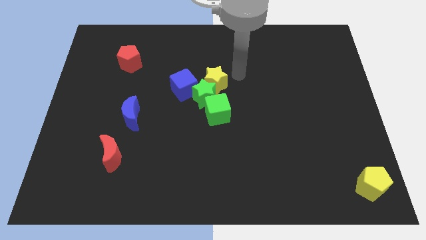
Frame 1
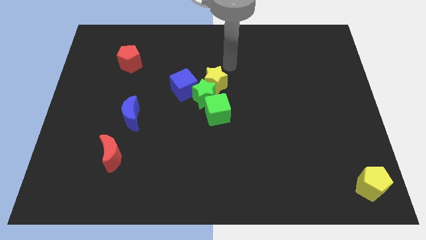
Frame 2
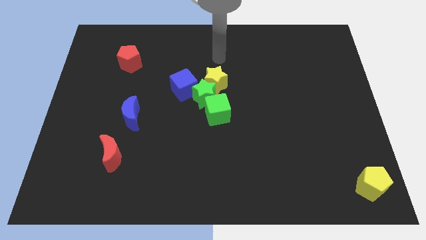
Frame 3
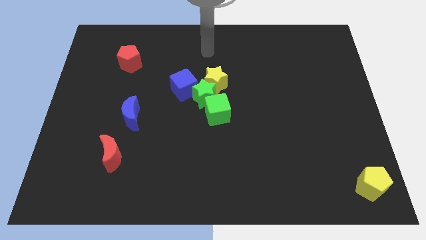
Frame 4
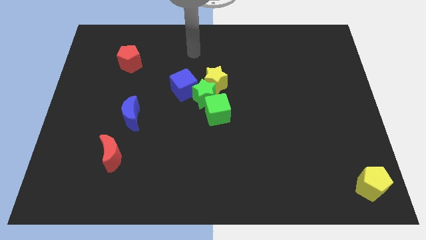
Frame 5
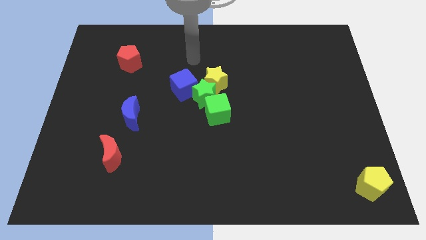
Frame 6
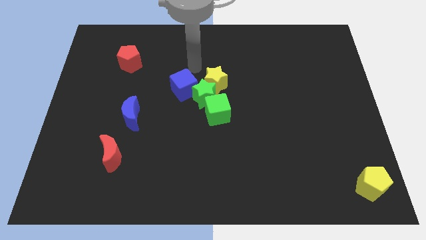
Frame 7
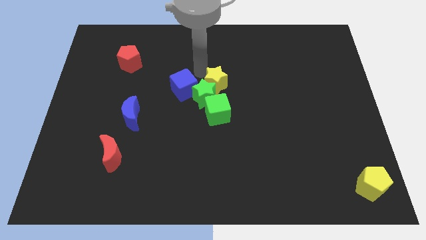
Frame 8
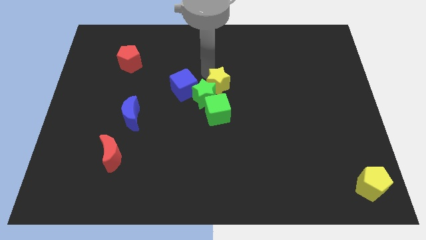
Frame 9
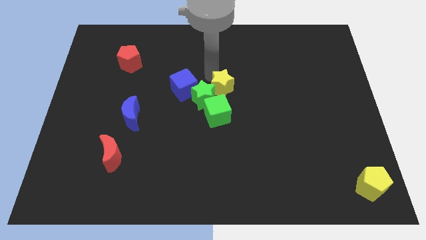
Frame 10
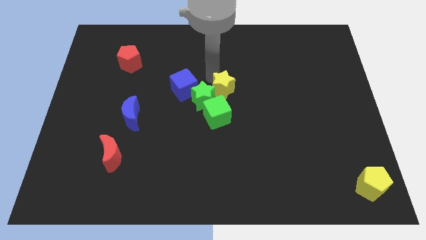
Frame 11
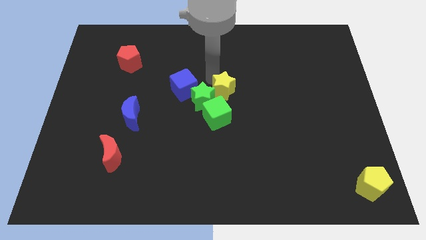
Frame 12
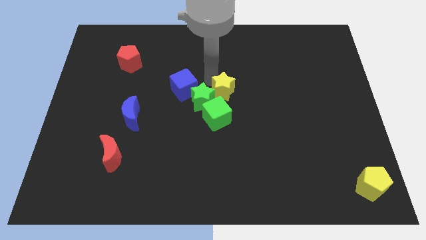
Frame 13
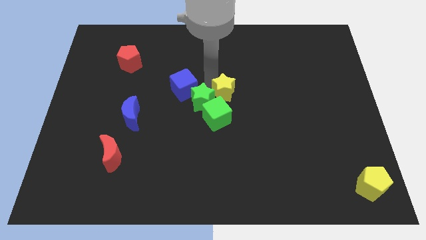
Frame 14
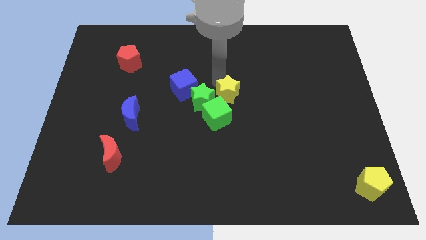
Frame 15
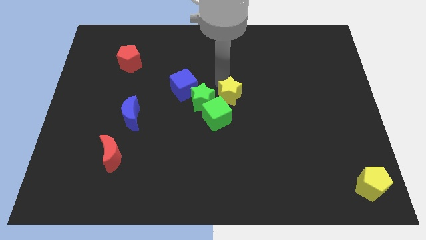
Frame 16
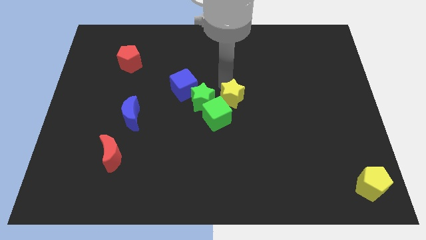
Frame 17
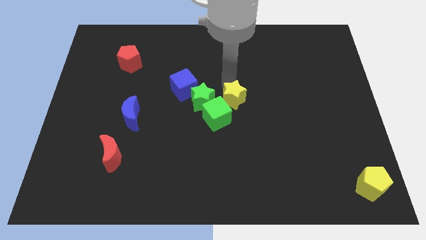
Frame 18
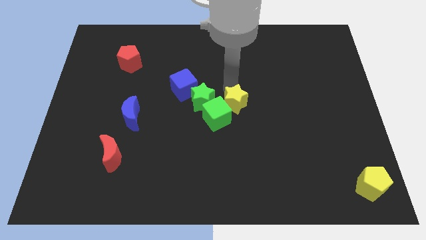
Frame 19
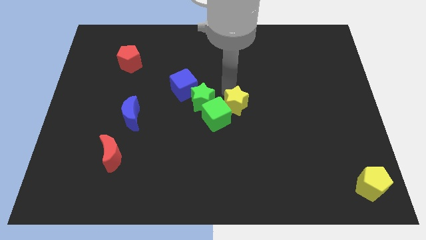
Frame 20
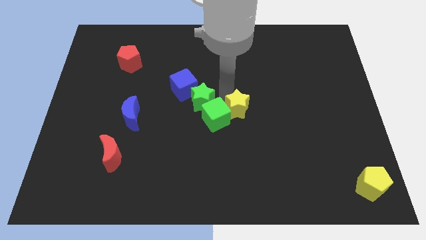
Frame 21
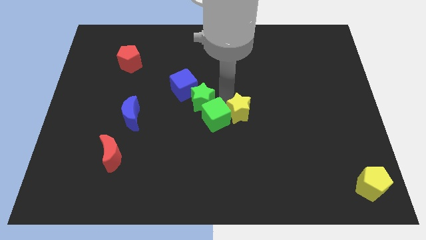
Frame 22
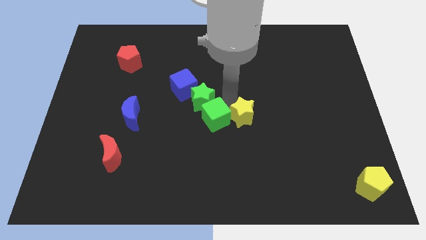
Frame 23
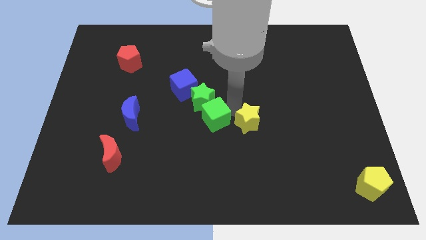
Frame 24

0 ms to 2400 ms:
separate the yellow star and green star

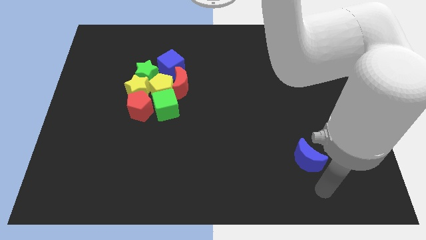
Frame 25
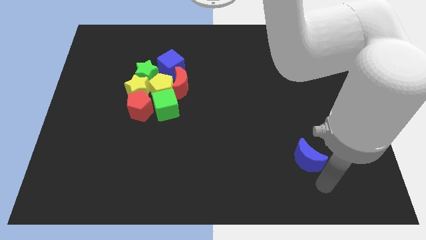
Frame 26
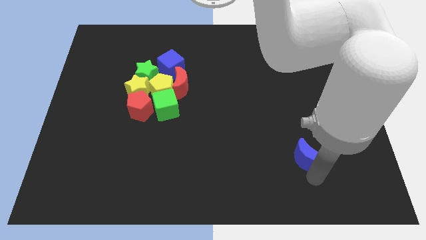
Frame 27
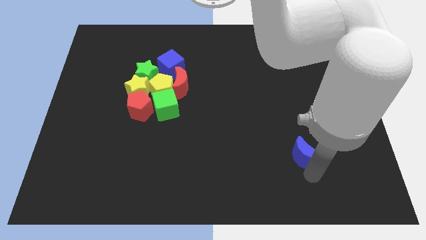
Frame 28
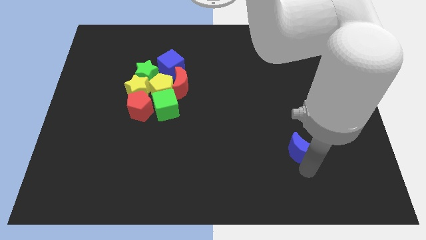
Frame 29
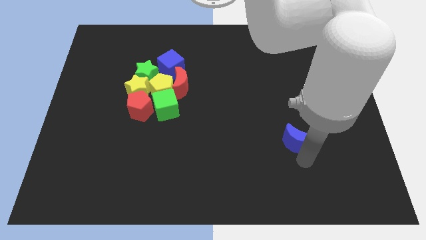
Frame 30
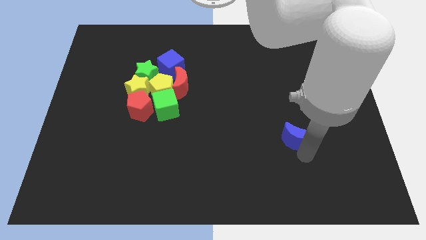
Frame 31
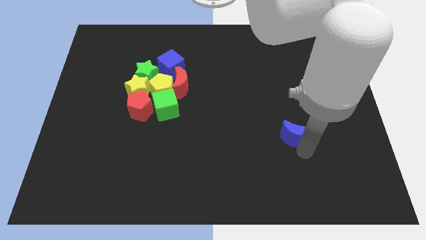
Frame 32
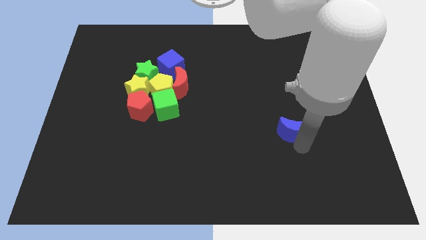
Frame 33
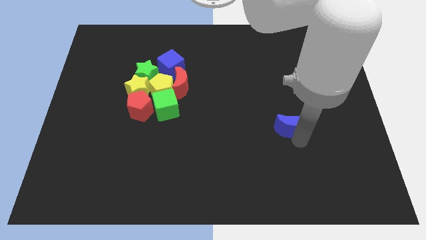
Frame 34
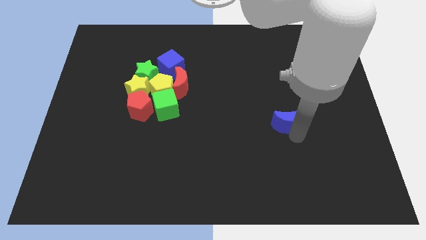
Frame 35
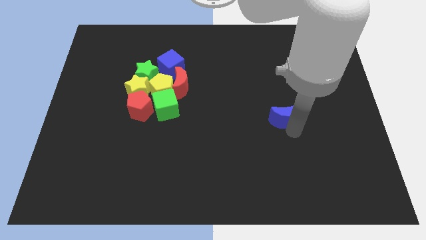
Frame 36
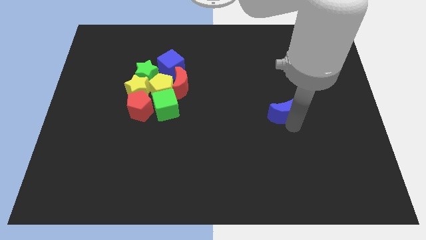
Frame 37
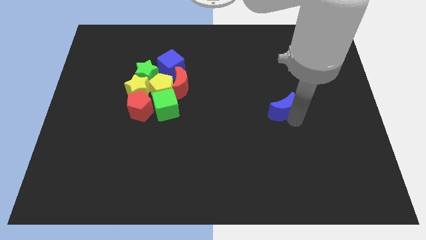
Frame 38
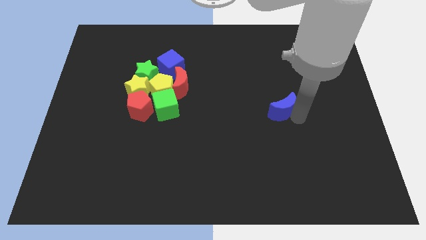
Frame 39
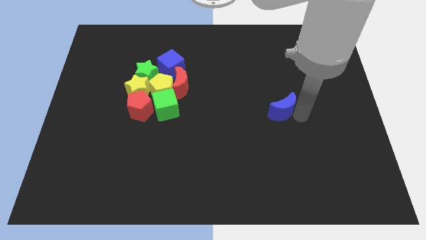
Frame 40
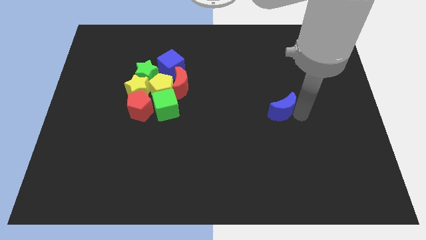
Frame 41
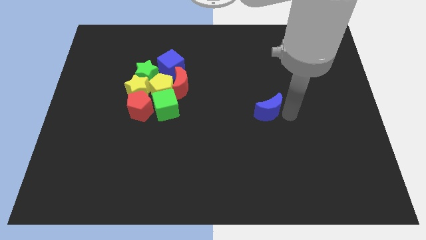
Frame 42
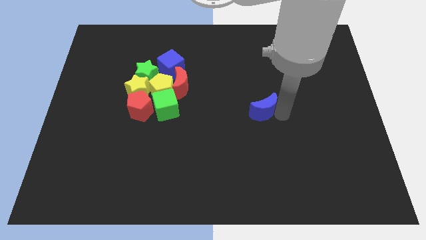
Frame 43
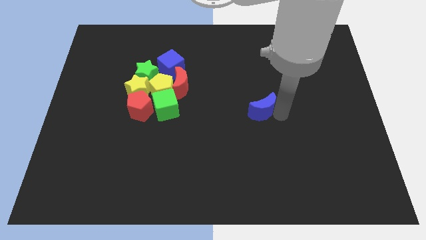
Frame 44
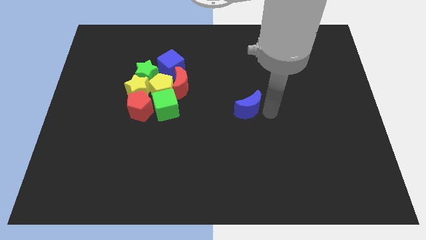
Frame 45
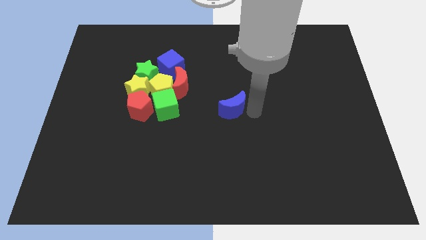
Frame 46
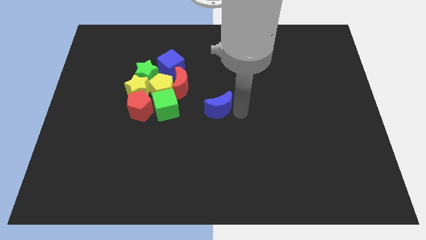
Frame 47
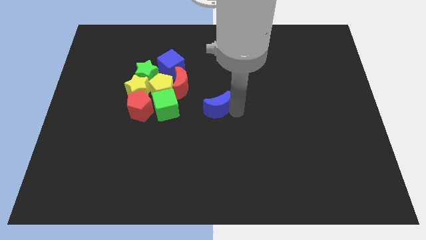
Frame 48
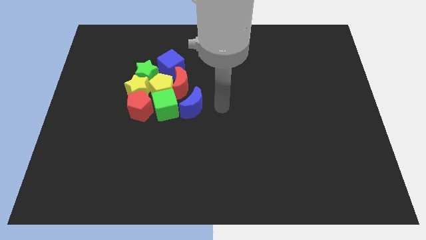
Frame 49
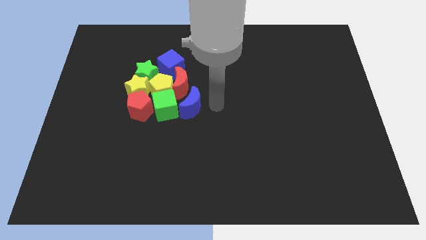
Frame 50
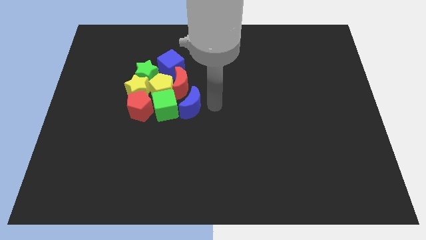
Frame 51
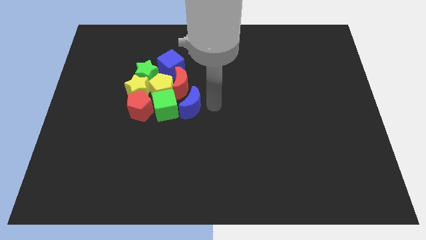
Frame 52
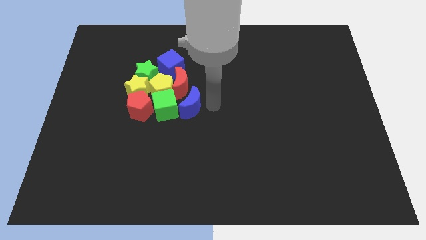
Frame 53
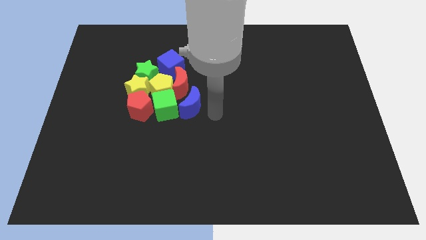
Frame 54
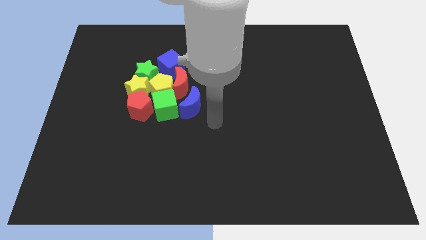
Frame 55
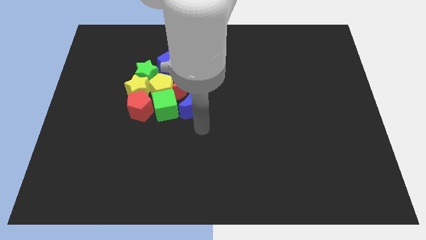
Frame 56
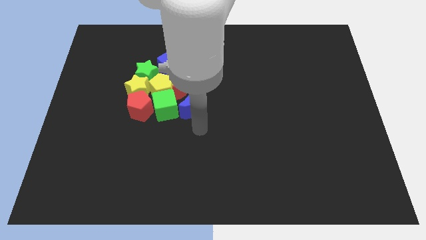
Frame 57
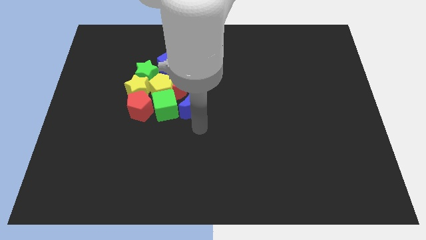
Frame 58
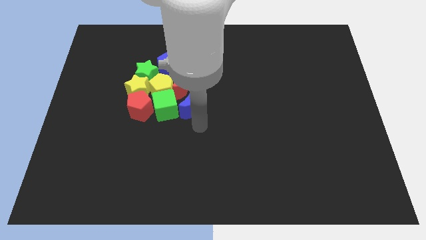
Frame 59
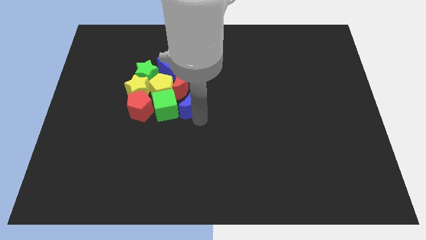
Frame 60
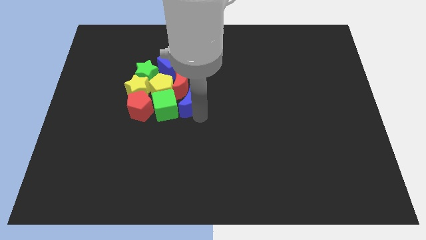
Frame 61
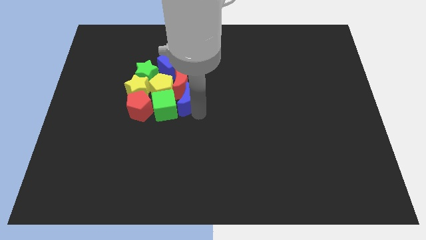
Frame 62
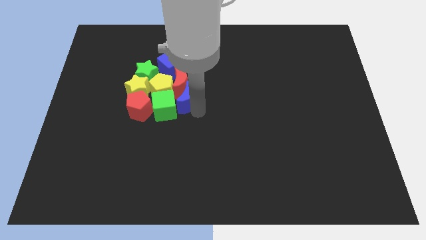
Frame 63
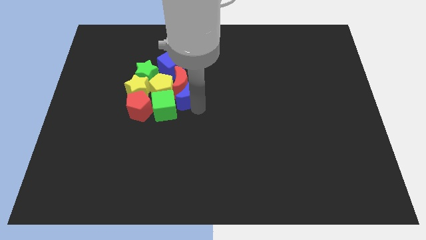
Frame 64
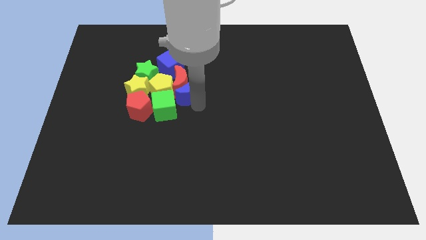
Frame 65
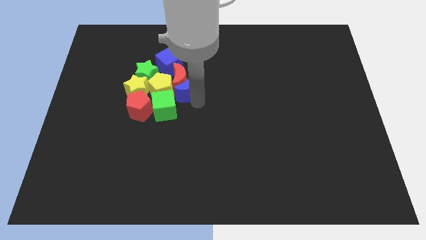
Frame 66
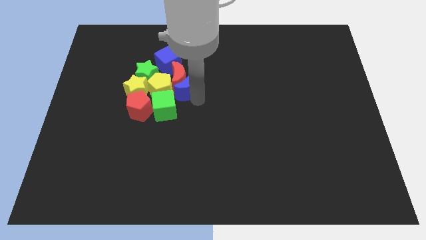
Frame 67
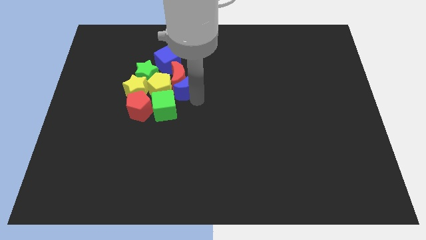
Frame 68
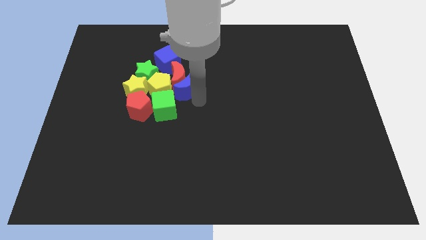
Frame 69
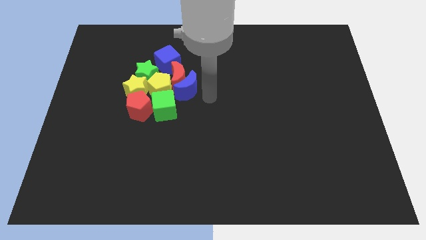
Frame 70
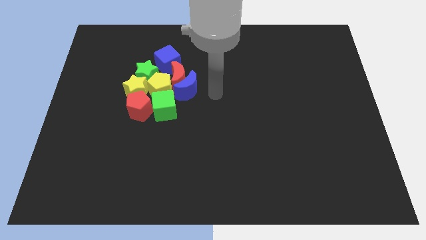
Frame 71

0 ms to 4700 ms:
push the blue moon into the red moon

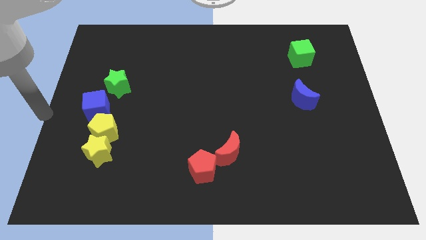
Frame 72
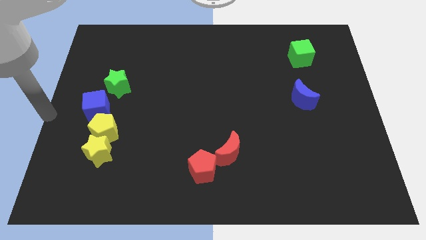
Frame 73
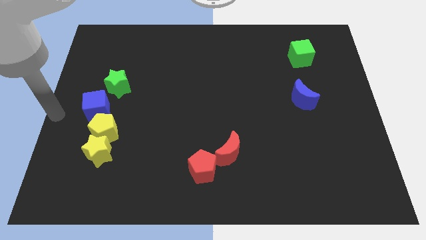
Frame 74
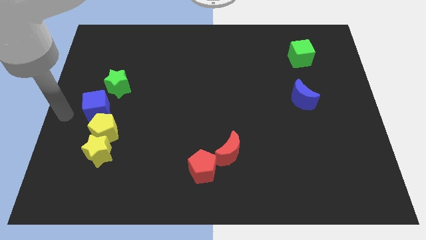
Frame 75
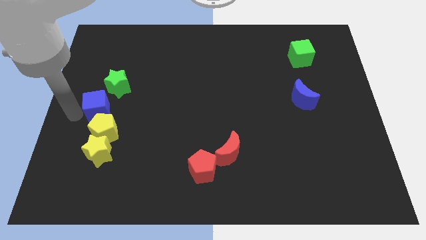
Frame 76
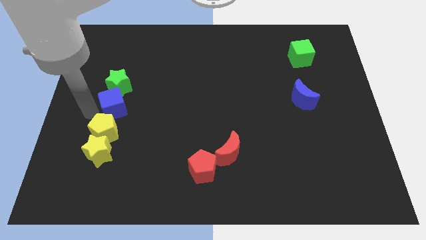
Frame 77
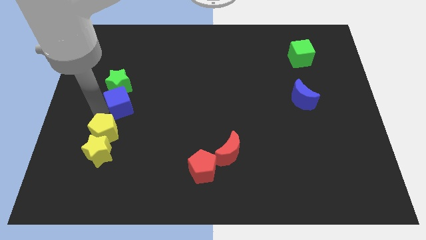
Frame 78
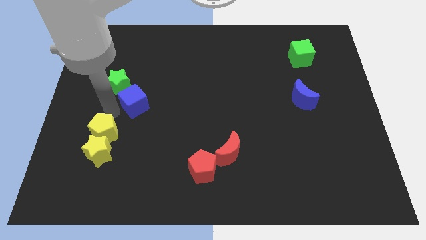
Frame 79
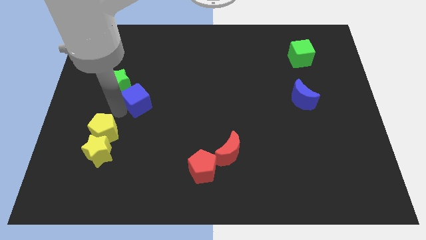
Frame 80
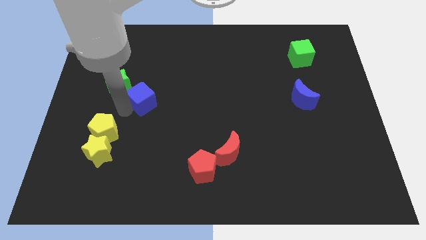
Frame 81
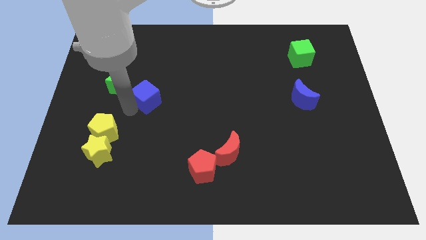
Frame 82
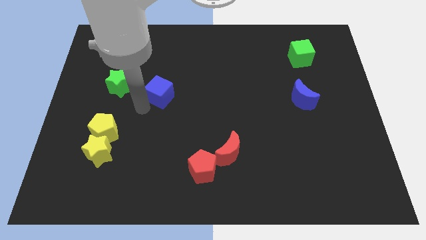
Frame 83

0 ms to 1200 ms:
push the blue cube towards the center of the board

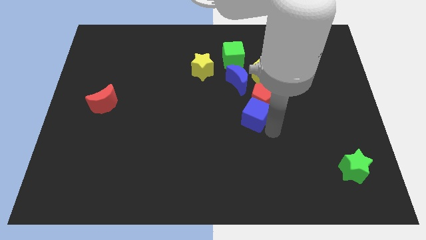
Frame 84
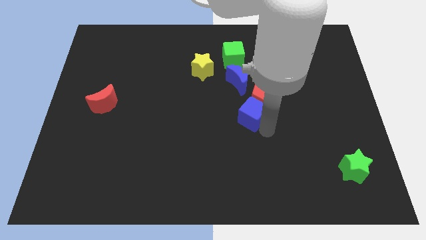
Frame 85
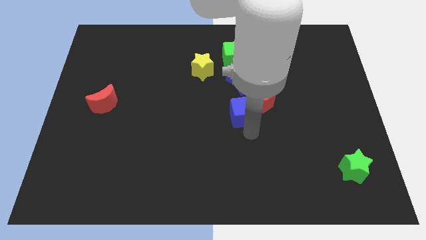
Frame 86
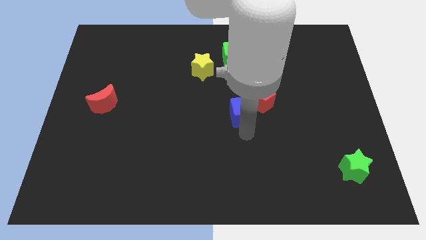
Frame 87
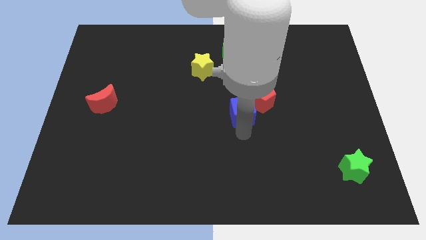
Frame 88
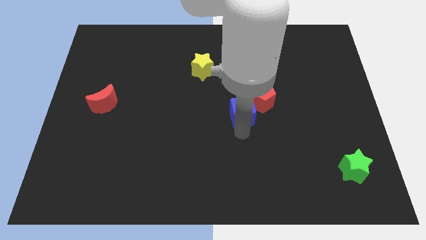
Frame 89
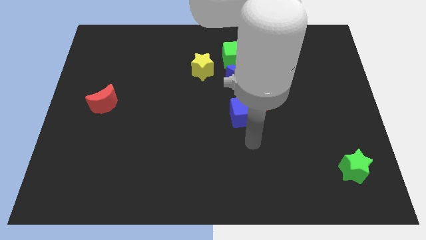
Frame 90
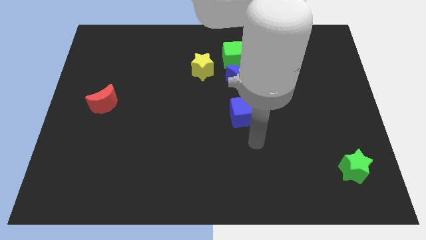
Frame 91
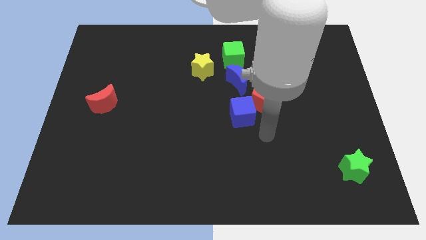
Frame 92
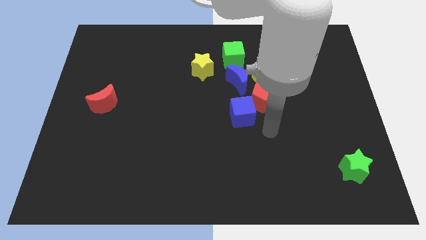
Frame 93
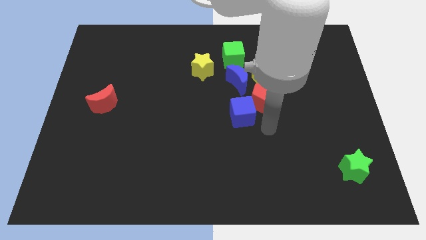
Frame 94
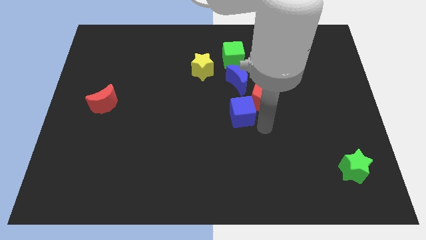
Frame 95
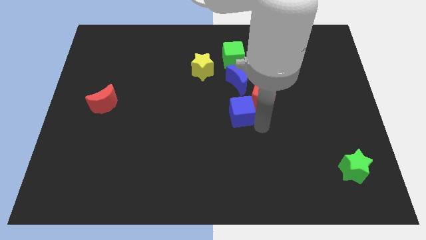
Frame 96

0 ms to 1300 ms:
move the blue cube slightly away from the bottom side of the red pentagon
